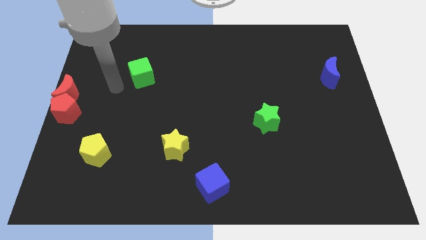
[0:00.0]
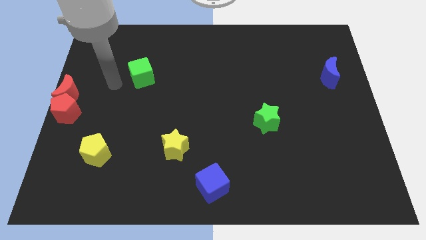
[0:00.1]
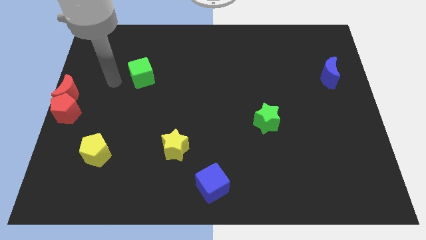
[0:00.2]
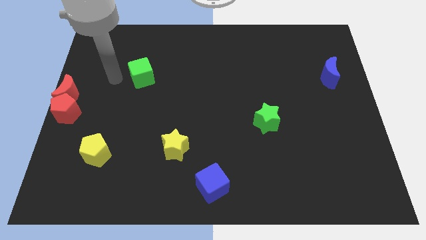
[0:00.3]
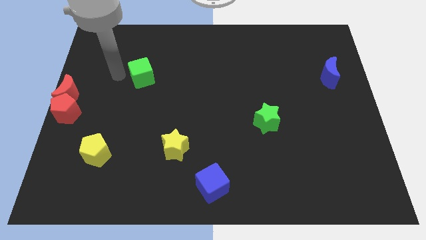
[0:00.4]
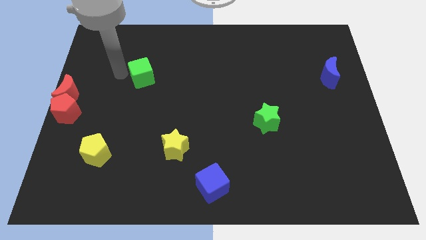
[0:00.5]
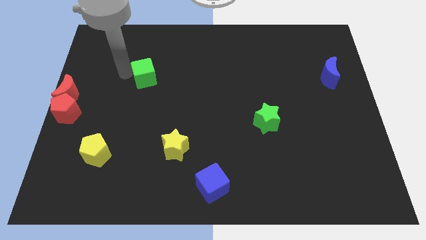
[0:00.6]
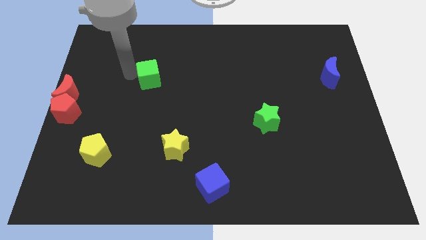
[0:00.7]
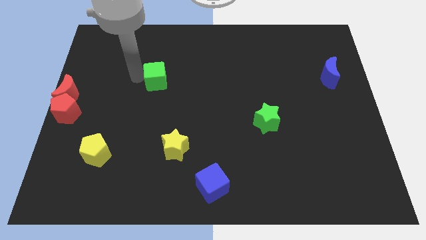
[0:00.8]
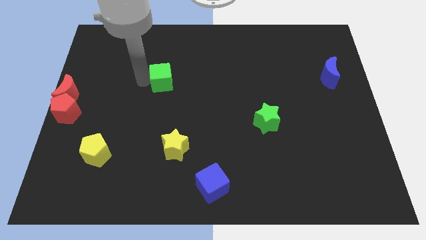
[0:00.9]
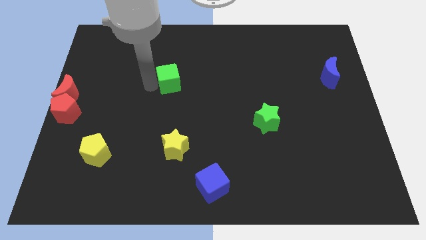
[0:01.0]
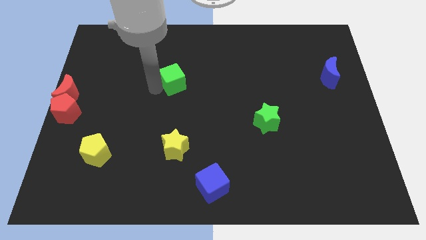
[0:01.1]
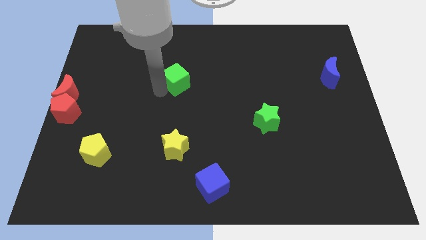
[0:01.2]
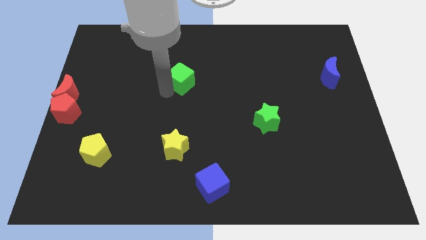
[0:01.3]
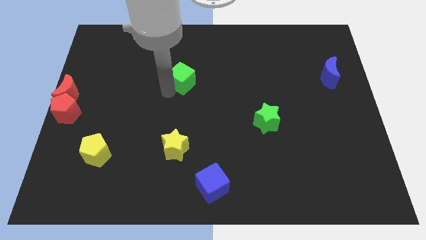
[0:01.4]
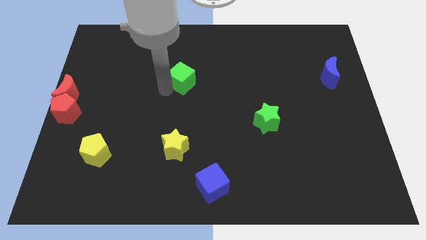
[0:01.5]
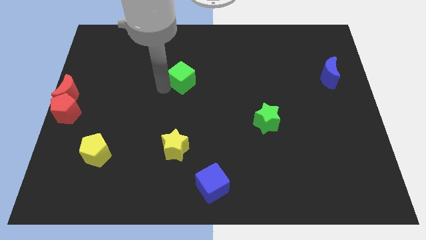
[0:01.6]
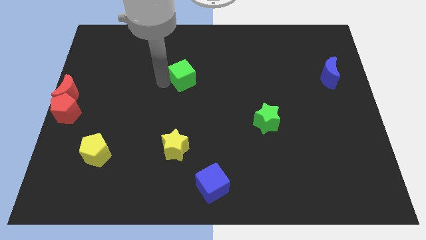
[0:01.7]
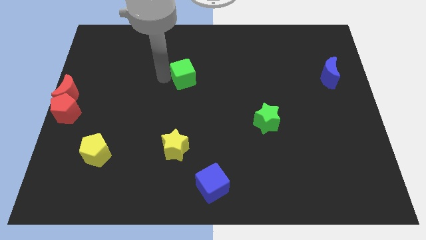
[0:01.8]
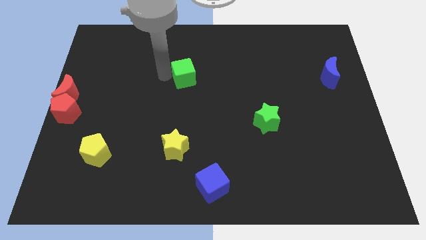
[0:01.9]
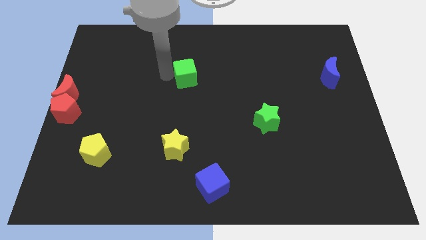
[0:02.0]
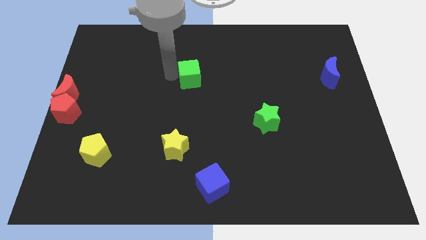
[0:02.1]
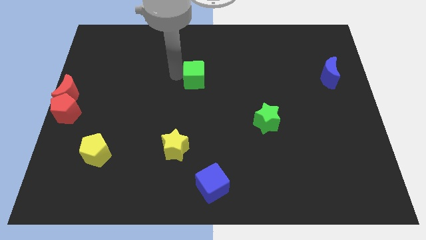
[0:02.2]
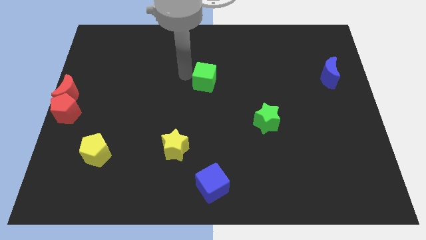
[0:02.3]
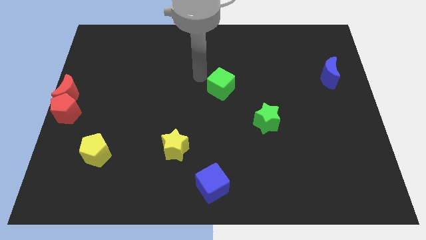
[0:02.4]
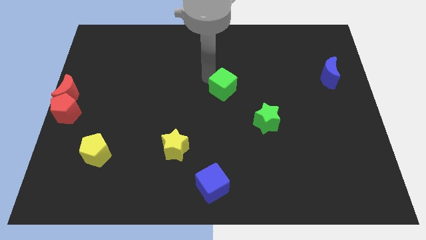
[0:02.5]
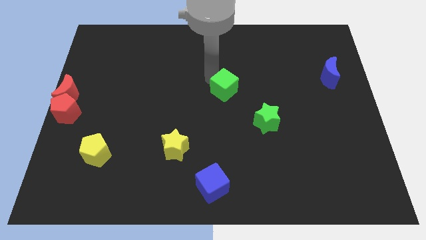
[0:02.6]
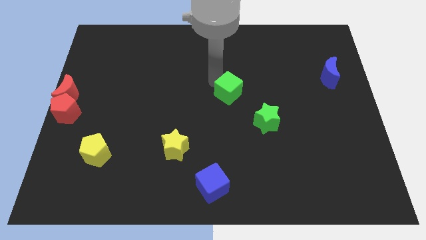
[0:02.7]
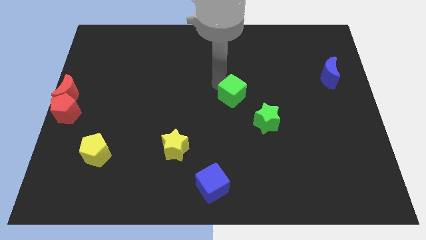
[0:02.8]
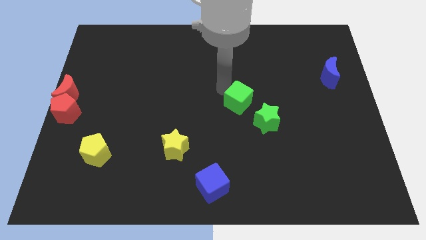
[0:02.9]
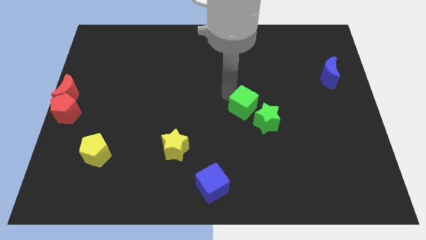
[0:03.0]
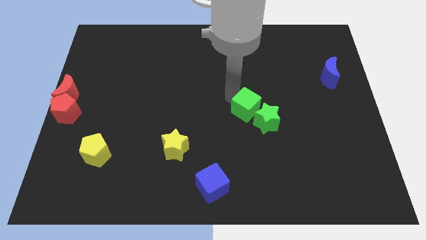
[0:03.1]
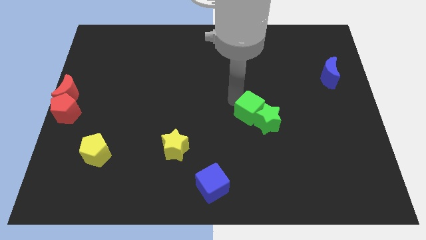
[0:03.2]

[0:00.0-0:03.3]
move the green cube diagonally above the green star

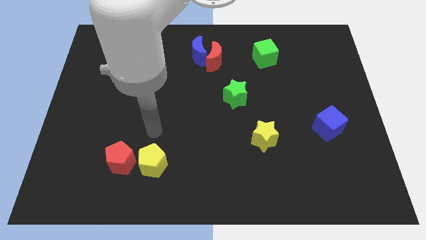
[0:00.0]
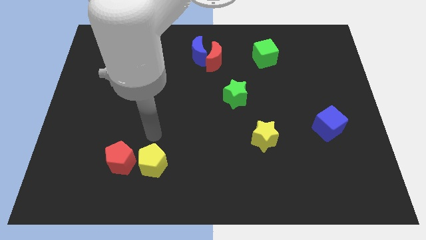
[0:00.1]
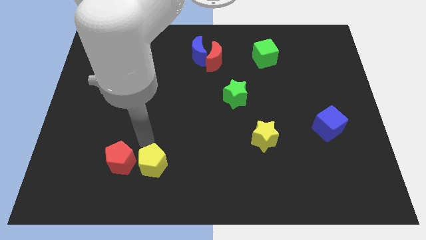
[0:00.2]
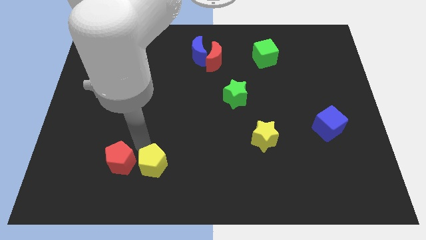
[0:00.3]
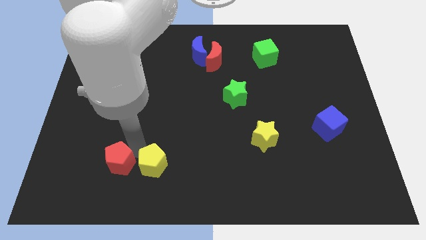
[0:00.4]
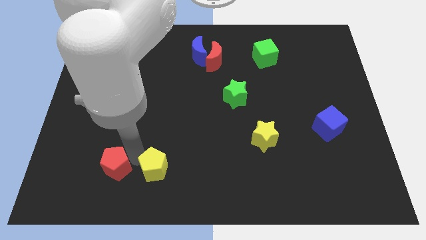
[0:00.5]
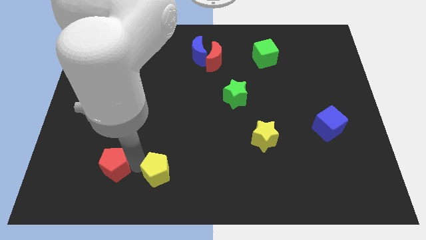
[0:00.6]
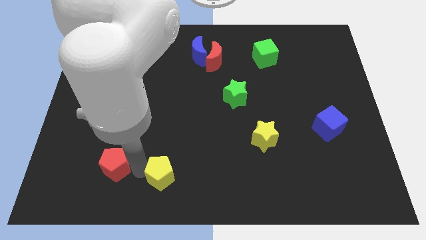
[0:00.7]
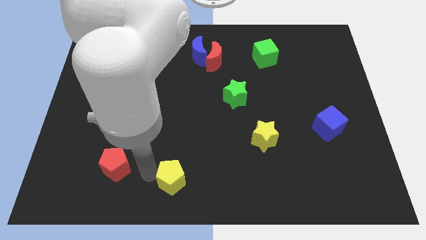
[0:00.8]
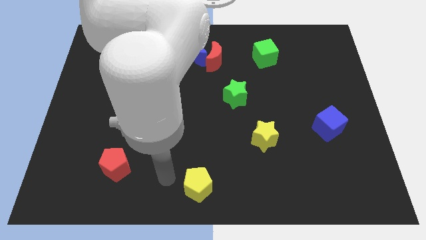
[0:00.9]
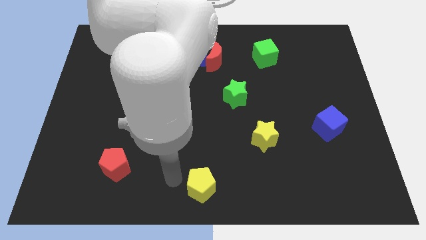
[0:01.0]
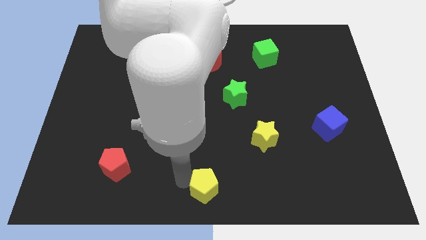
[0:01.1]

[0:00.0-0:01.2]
separate yellow pentagon from red pentagon

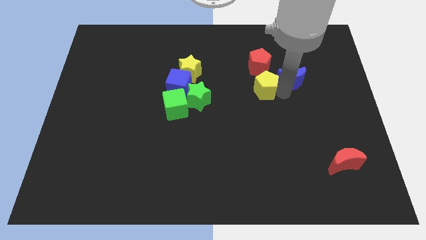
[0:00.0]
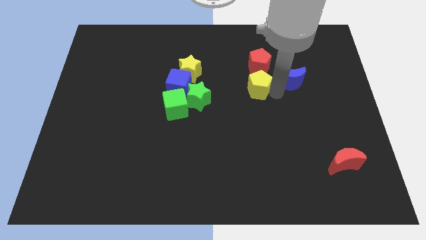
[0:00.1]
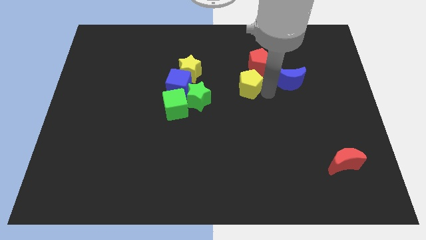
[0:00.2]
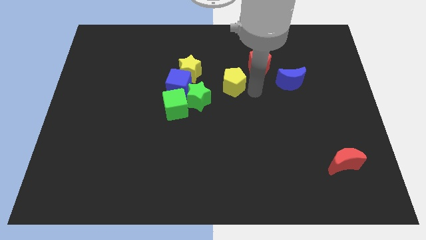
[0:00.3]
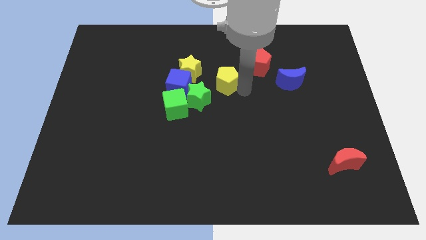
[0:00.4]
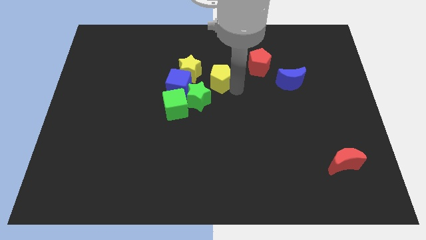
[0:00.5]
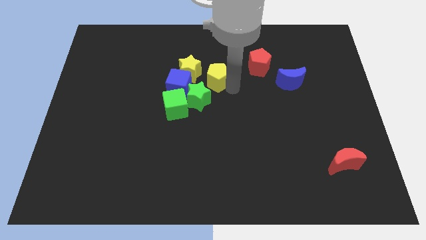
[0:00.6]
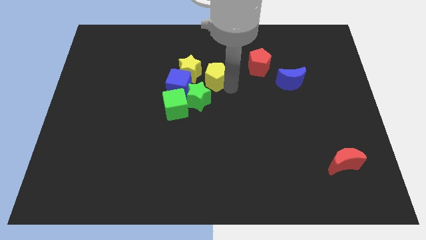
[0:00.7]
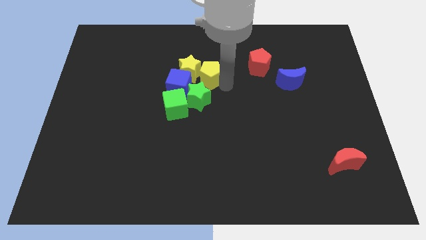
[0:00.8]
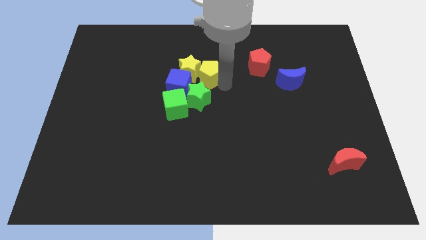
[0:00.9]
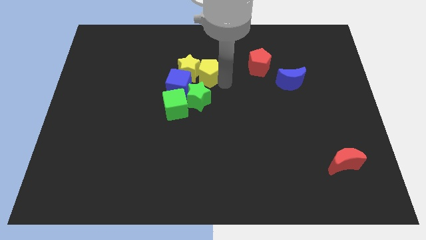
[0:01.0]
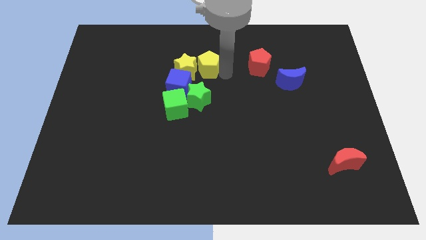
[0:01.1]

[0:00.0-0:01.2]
place yellow pentagon to the right of yellow star

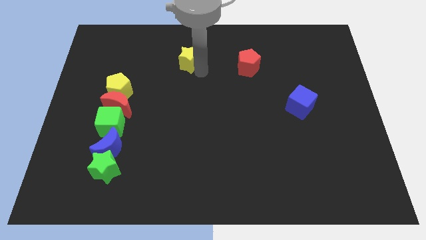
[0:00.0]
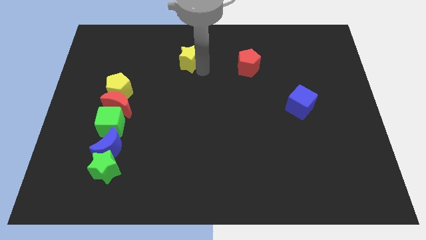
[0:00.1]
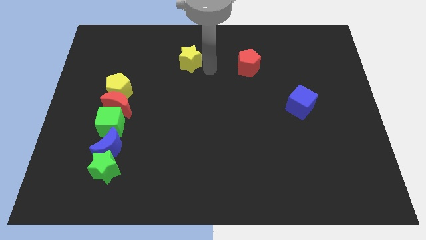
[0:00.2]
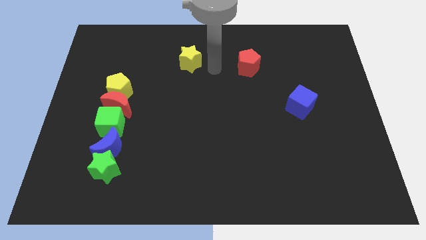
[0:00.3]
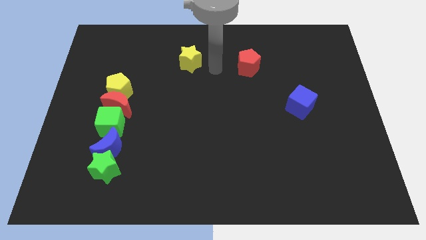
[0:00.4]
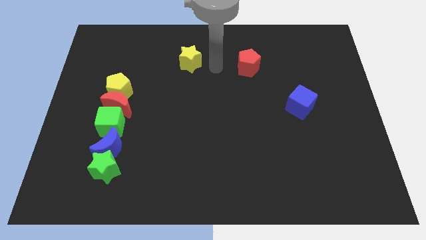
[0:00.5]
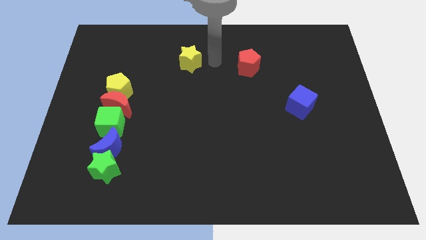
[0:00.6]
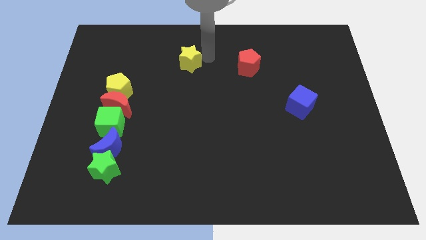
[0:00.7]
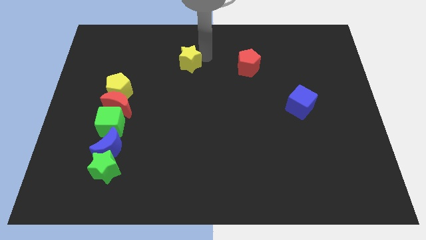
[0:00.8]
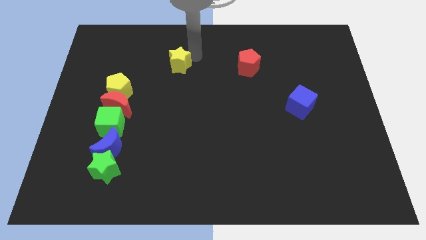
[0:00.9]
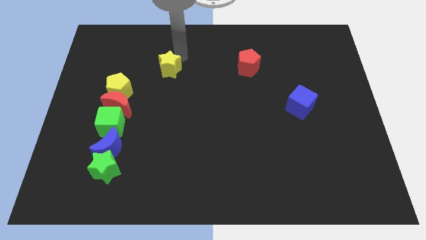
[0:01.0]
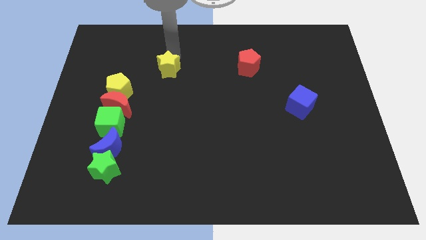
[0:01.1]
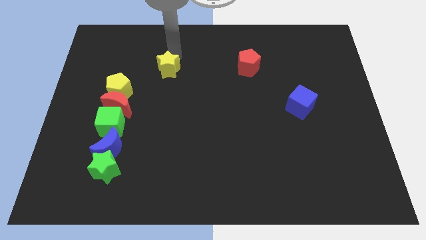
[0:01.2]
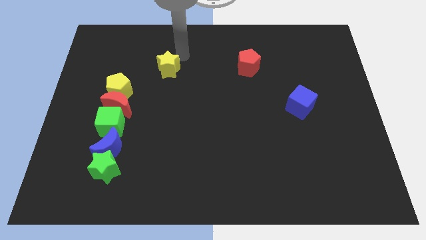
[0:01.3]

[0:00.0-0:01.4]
place the yellow star towards left

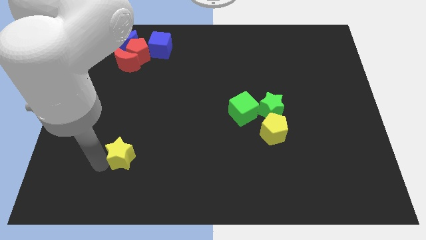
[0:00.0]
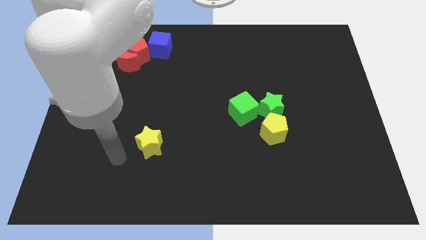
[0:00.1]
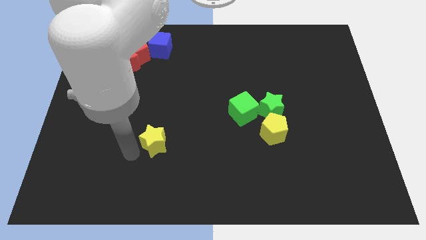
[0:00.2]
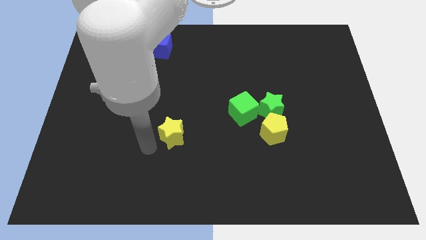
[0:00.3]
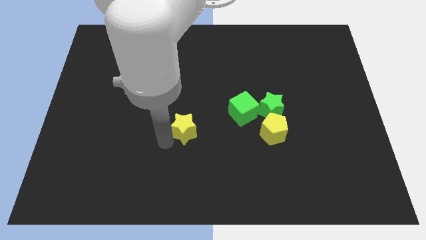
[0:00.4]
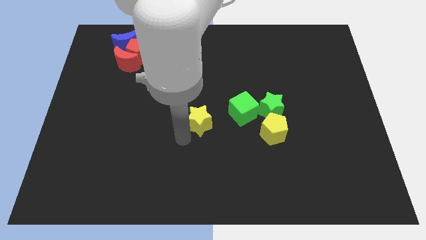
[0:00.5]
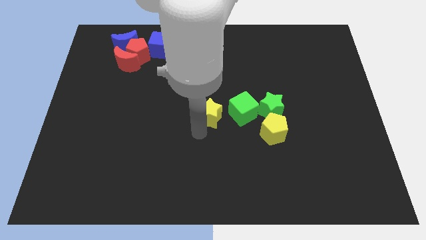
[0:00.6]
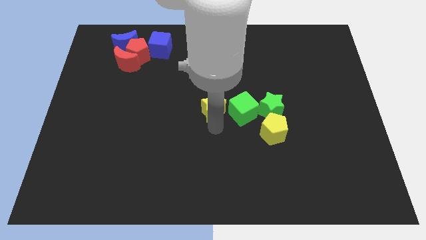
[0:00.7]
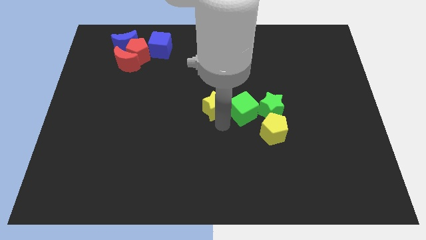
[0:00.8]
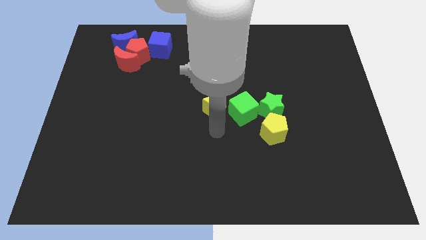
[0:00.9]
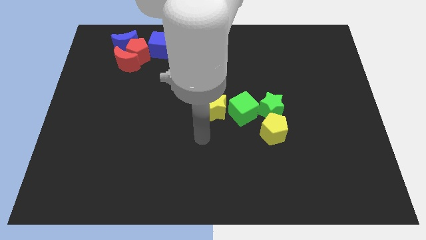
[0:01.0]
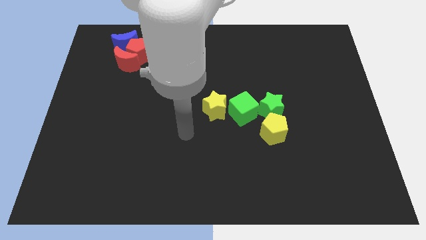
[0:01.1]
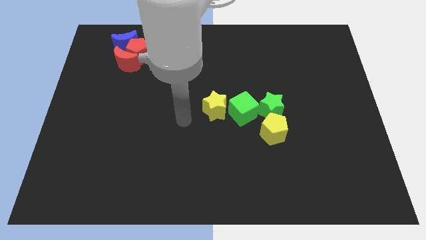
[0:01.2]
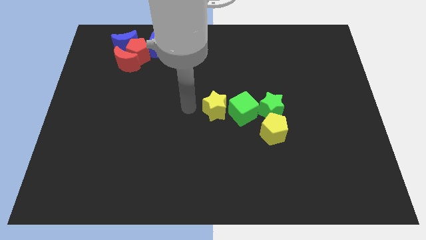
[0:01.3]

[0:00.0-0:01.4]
push the yellow star to the left of the green cube

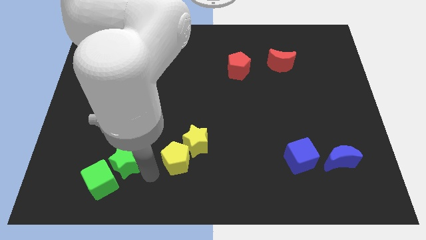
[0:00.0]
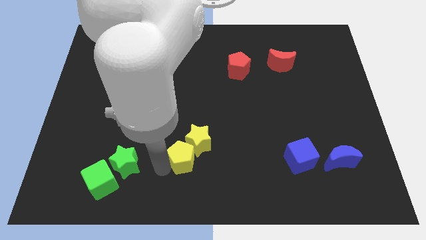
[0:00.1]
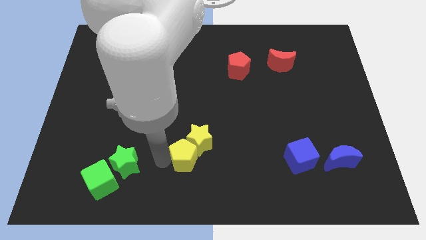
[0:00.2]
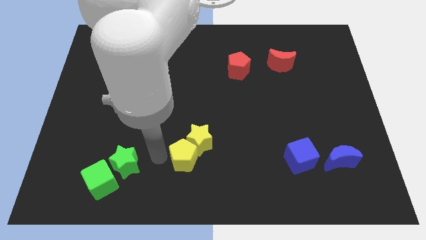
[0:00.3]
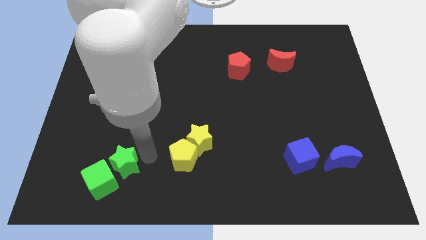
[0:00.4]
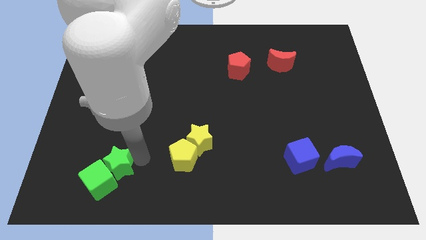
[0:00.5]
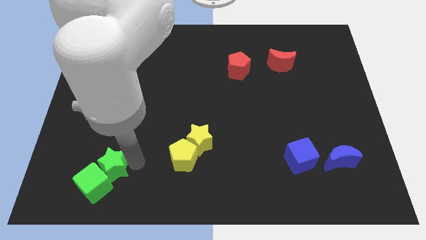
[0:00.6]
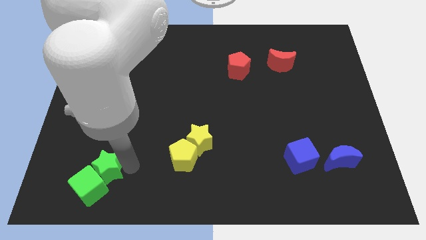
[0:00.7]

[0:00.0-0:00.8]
move the green star into the green cube
